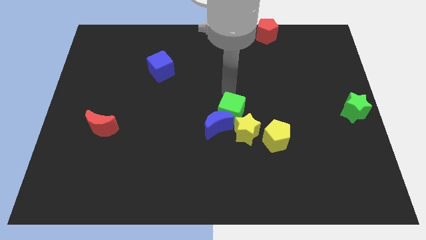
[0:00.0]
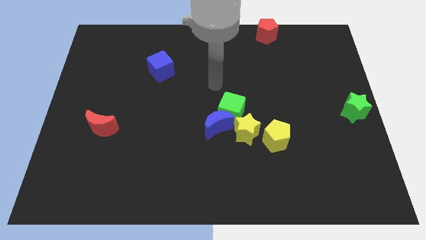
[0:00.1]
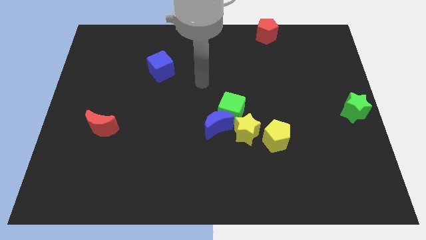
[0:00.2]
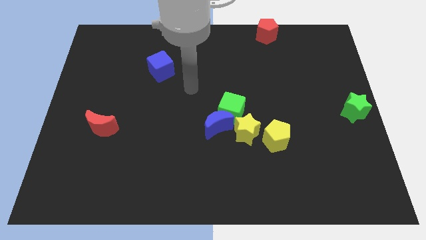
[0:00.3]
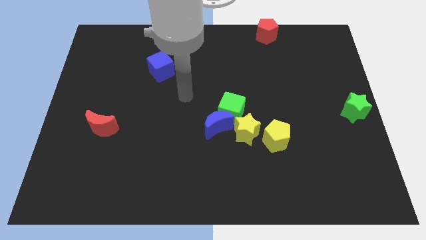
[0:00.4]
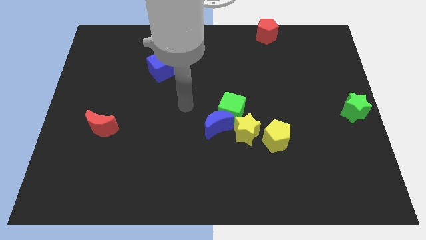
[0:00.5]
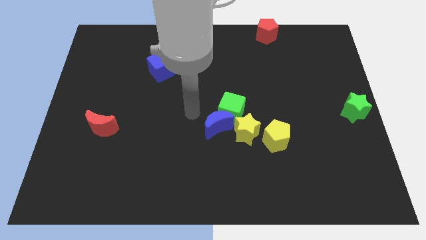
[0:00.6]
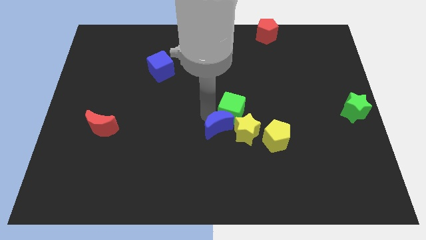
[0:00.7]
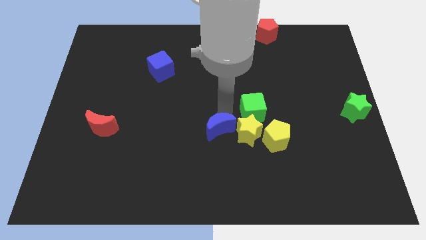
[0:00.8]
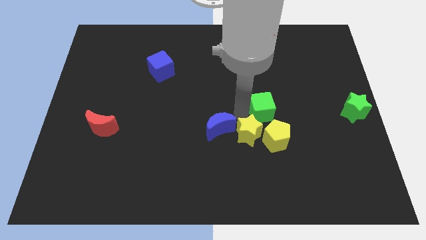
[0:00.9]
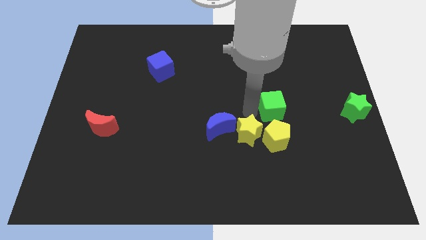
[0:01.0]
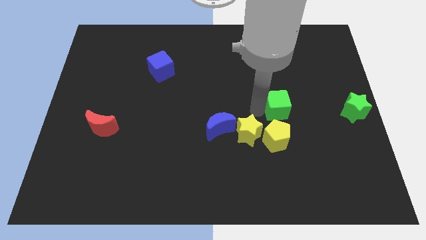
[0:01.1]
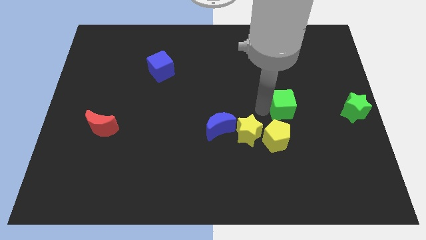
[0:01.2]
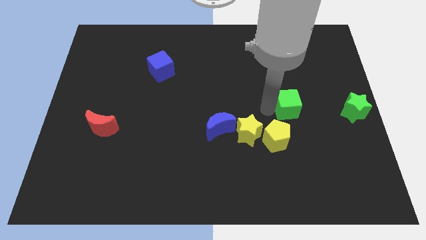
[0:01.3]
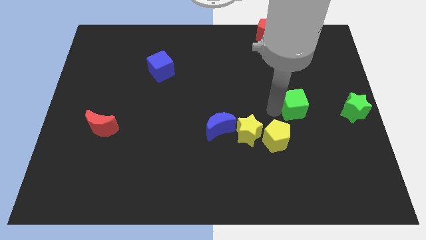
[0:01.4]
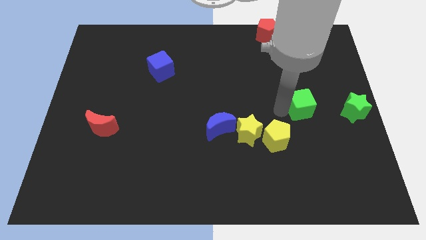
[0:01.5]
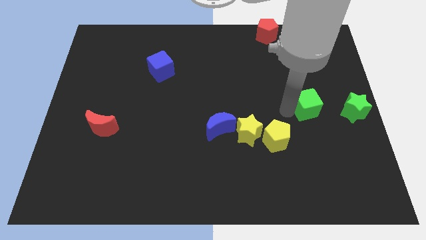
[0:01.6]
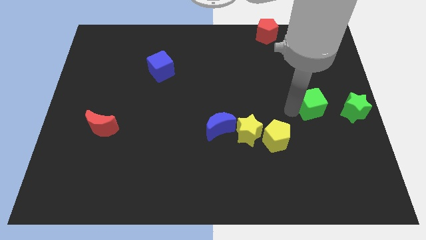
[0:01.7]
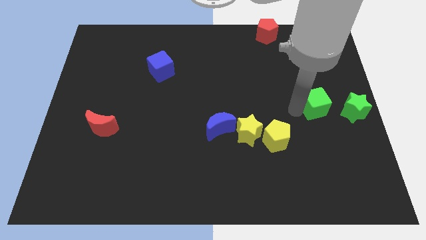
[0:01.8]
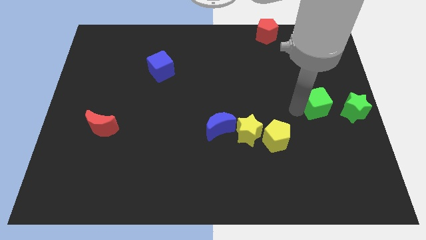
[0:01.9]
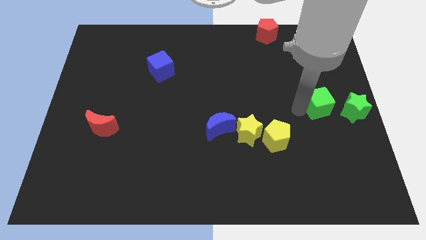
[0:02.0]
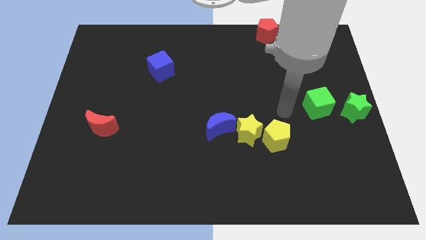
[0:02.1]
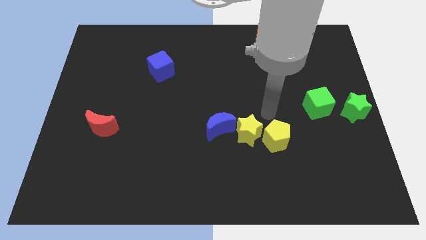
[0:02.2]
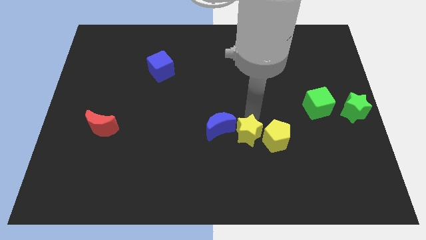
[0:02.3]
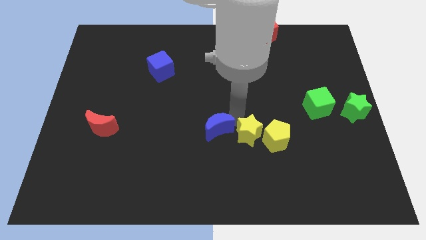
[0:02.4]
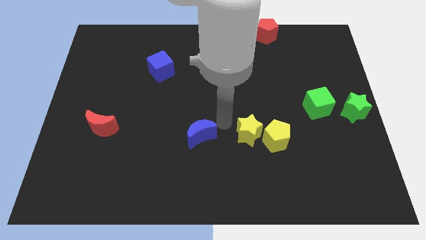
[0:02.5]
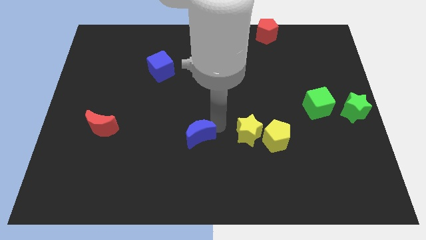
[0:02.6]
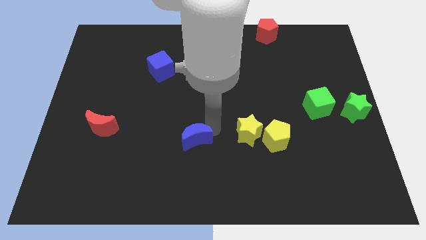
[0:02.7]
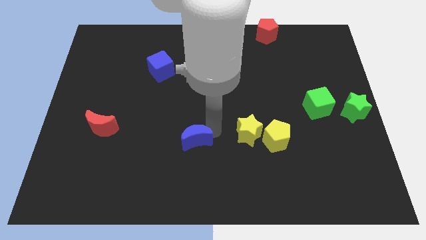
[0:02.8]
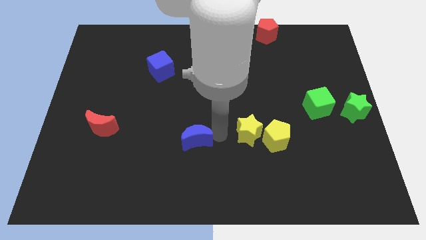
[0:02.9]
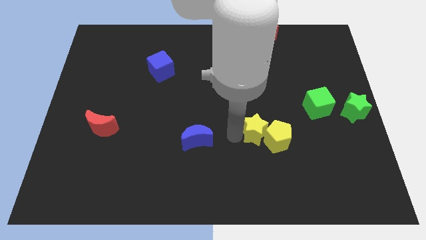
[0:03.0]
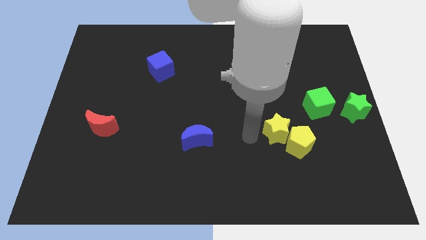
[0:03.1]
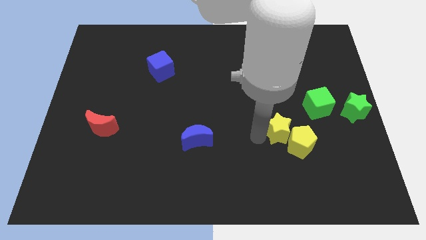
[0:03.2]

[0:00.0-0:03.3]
separate green cube from blue moon

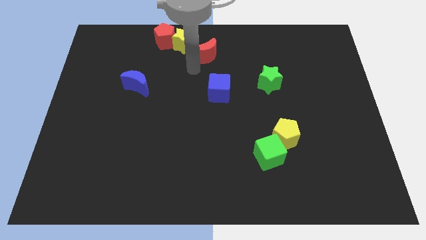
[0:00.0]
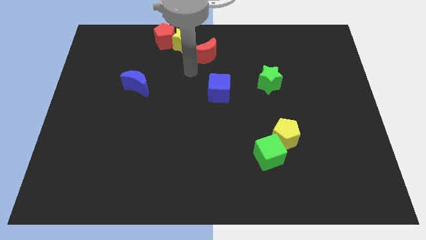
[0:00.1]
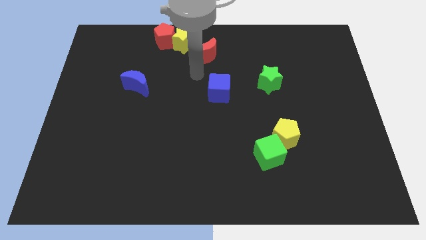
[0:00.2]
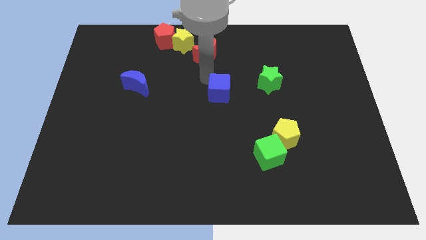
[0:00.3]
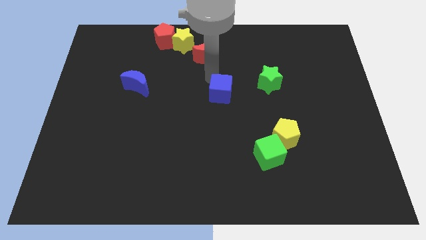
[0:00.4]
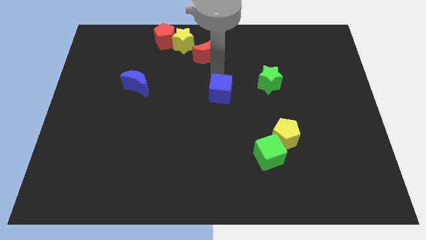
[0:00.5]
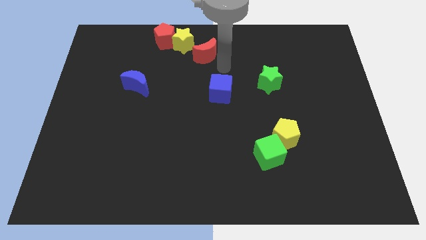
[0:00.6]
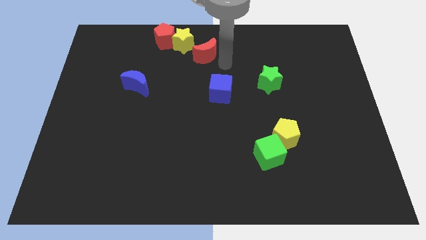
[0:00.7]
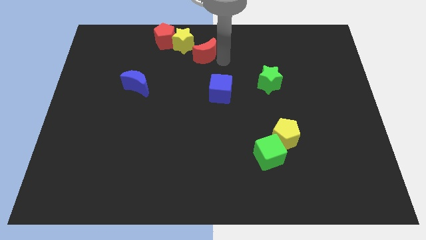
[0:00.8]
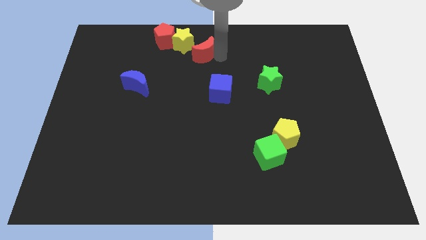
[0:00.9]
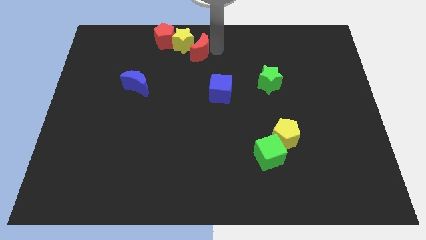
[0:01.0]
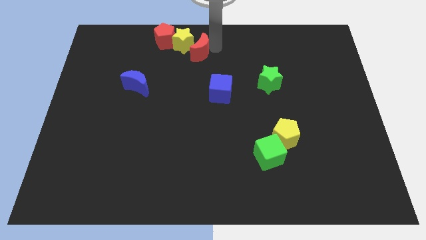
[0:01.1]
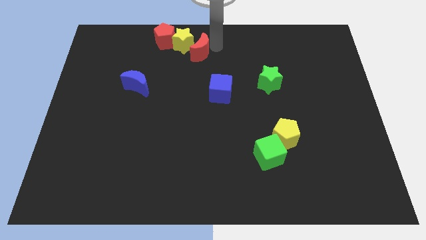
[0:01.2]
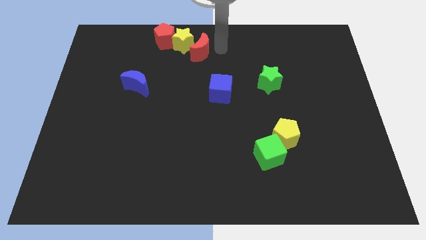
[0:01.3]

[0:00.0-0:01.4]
push the red moon right to the yellow star

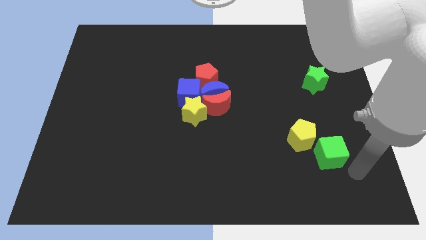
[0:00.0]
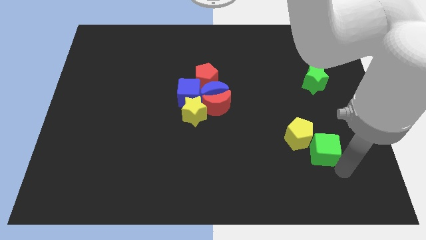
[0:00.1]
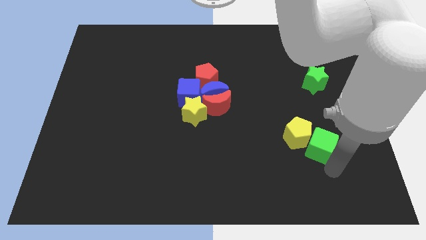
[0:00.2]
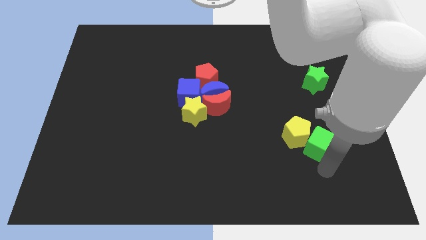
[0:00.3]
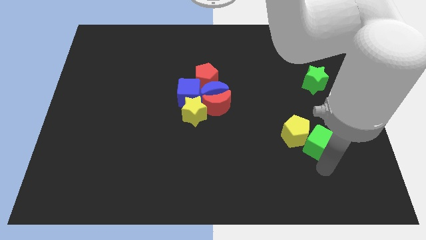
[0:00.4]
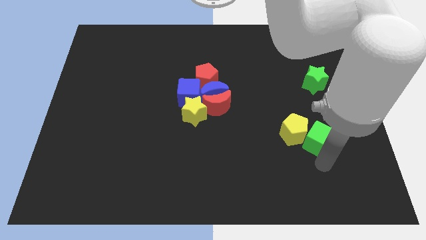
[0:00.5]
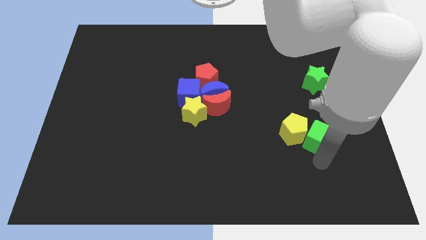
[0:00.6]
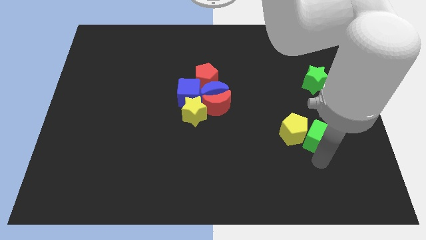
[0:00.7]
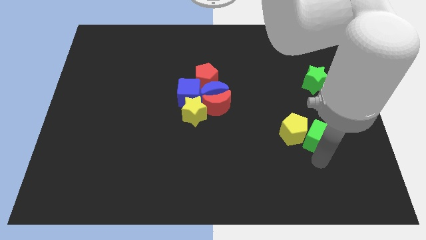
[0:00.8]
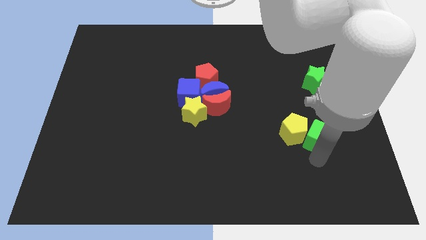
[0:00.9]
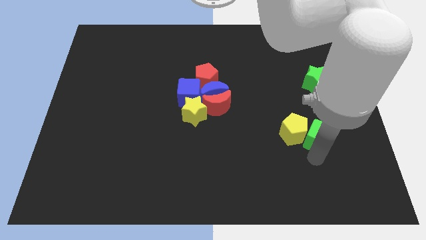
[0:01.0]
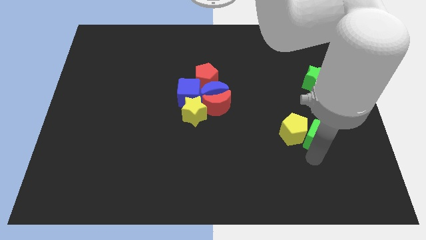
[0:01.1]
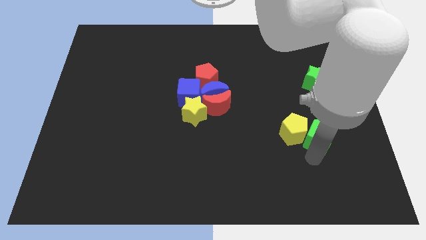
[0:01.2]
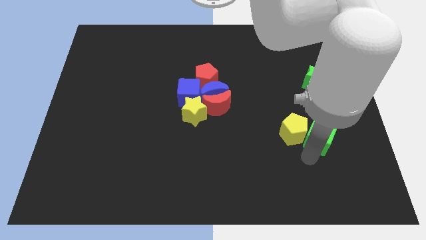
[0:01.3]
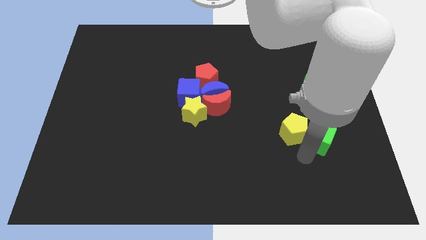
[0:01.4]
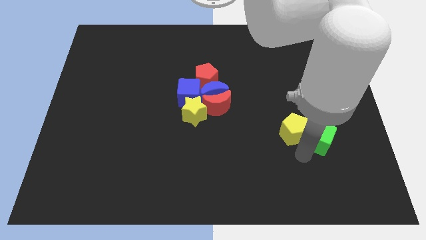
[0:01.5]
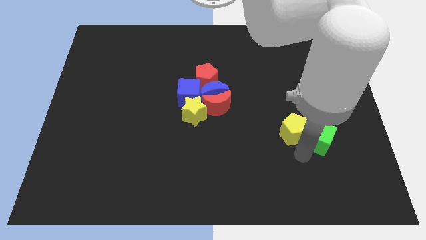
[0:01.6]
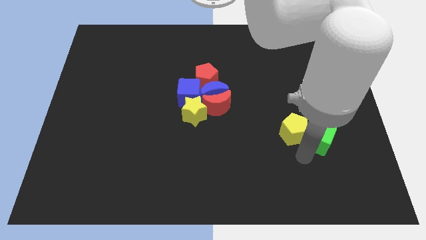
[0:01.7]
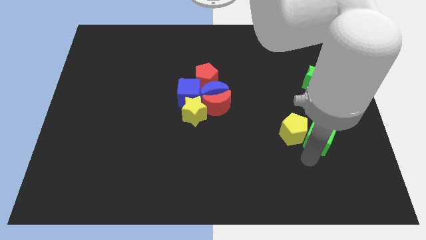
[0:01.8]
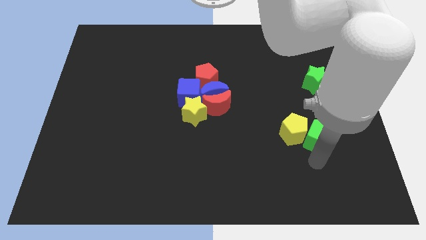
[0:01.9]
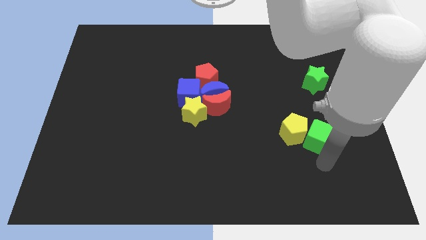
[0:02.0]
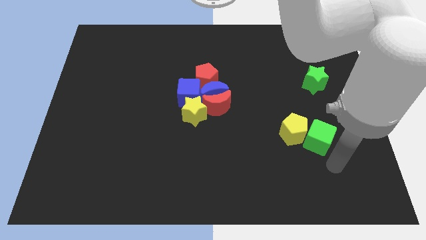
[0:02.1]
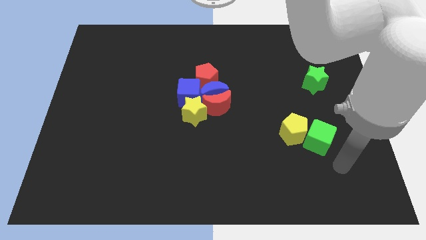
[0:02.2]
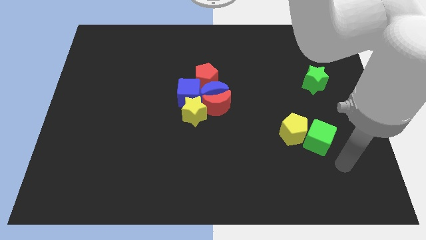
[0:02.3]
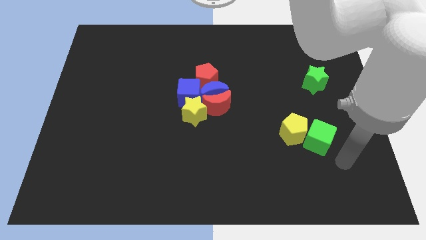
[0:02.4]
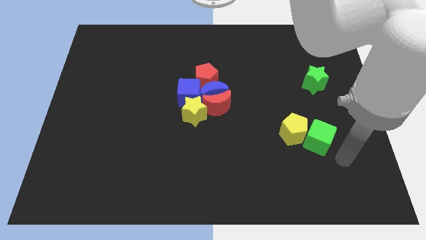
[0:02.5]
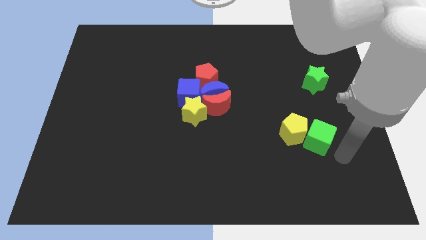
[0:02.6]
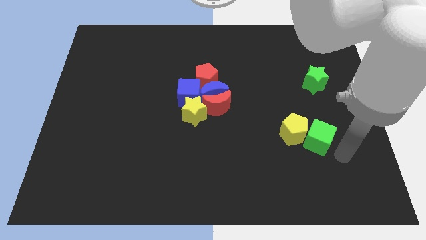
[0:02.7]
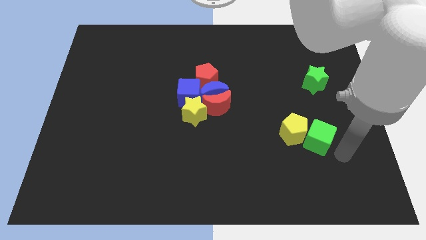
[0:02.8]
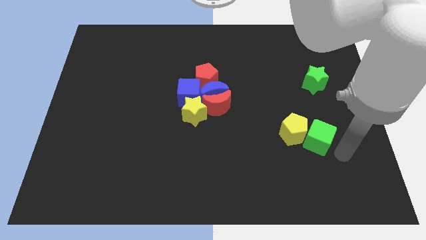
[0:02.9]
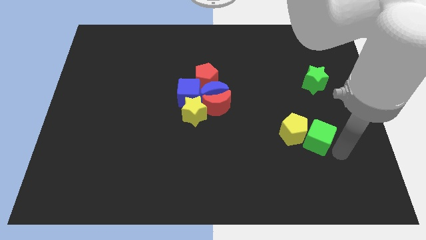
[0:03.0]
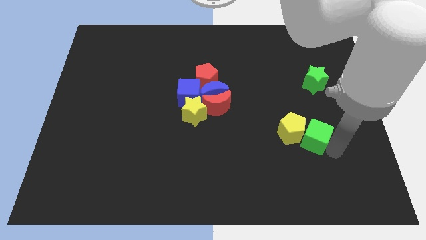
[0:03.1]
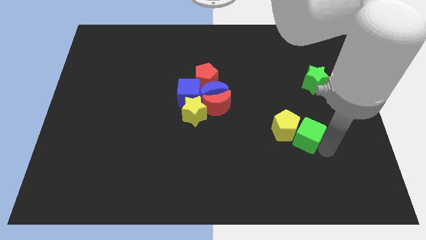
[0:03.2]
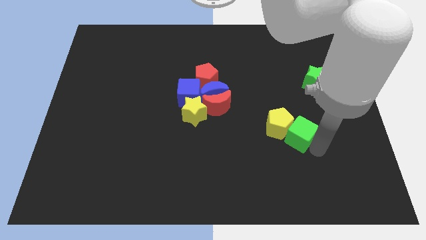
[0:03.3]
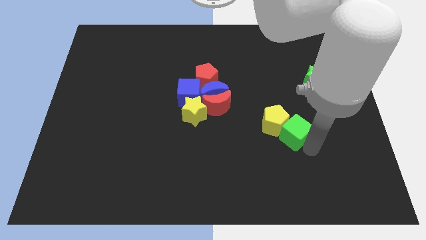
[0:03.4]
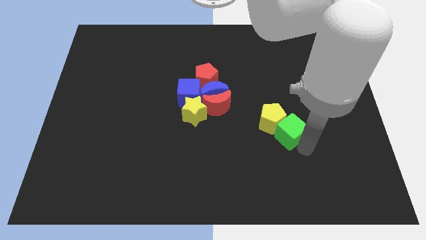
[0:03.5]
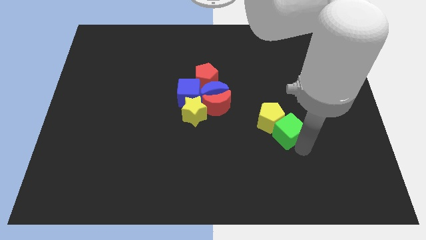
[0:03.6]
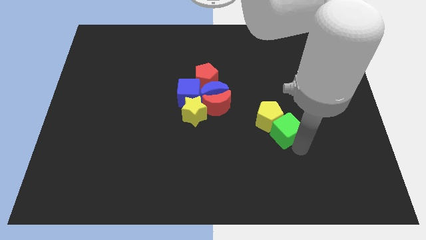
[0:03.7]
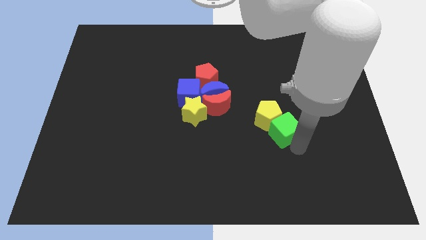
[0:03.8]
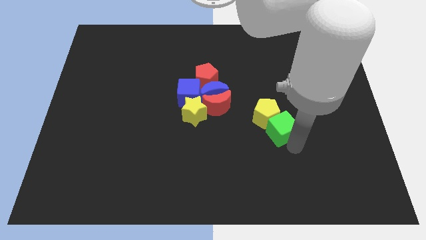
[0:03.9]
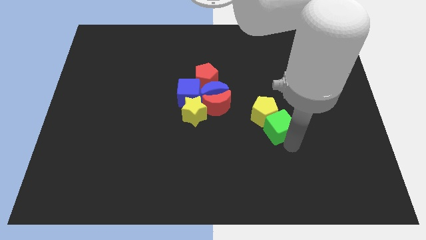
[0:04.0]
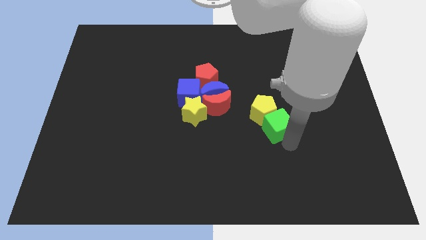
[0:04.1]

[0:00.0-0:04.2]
push the green cube into the yellow pentagon
